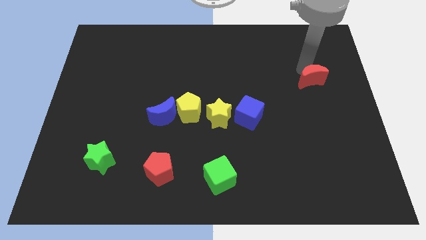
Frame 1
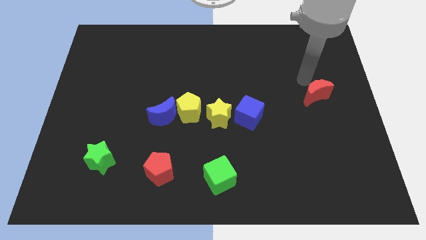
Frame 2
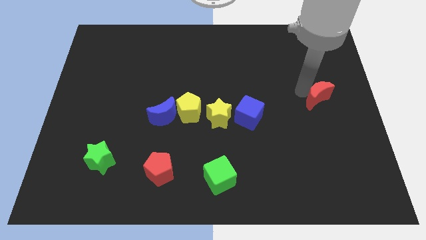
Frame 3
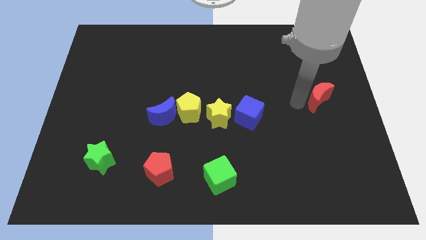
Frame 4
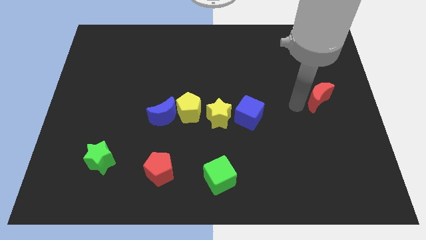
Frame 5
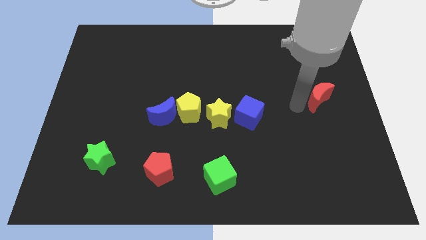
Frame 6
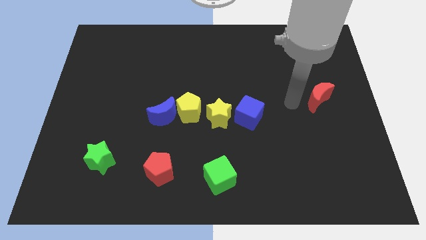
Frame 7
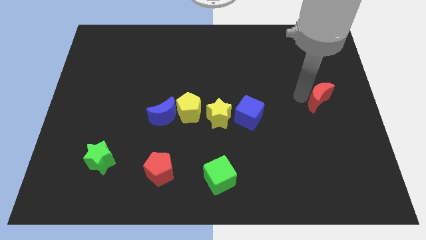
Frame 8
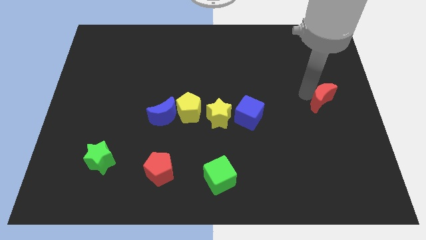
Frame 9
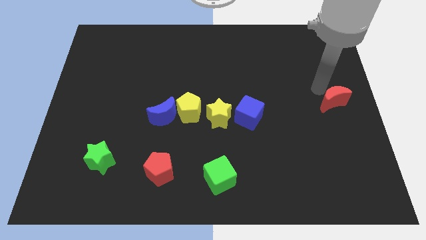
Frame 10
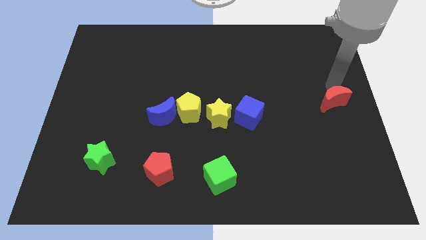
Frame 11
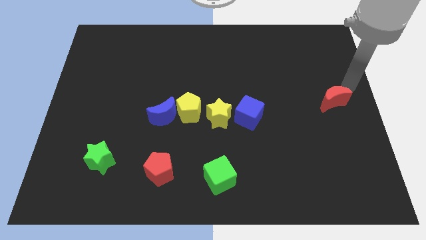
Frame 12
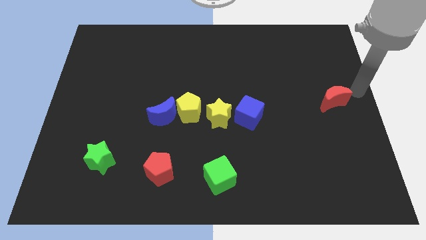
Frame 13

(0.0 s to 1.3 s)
push the red crescent to the right center of the board

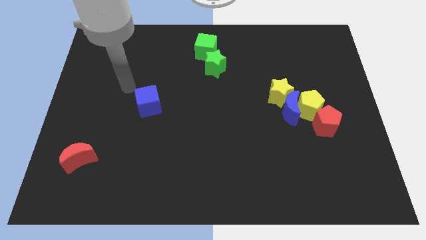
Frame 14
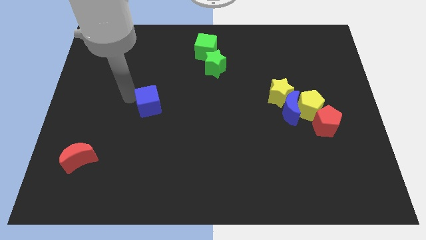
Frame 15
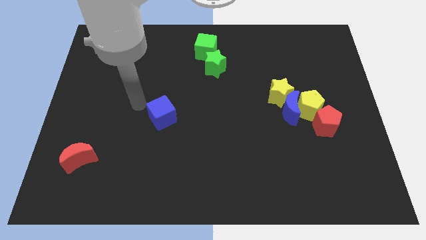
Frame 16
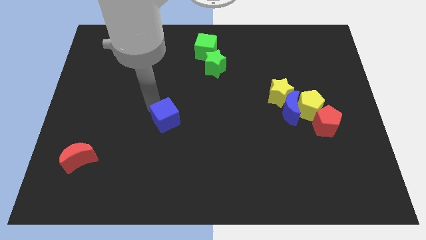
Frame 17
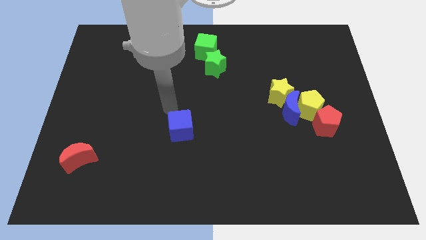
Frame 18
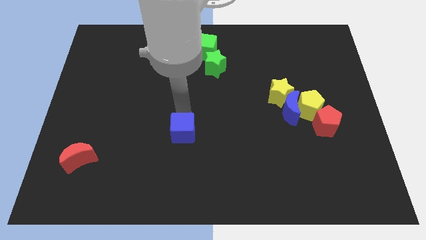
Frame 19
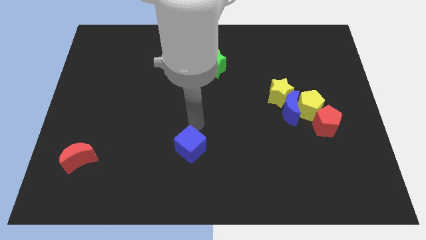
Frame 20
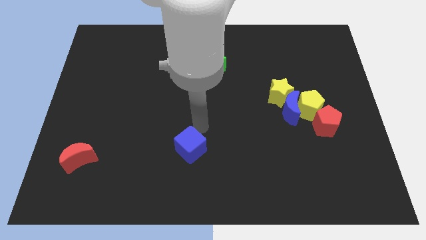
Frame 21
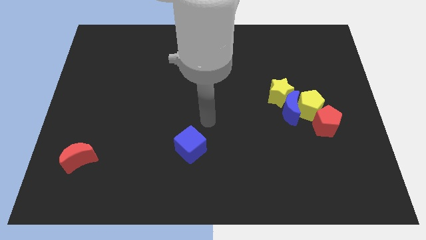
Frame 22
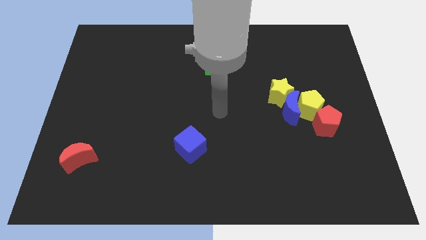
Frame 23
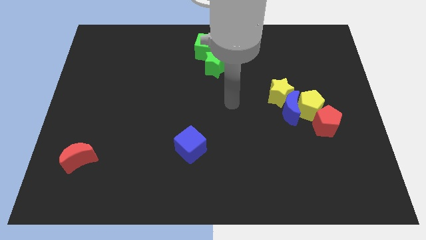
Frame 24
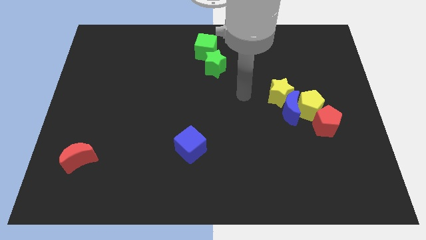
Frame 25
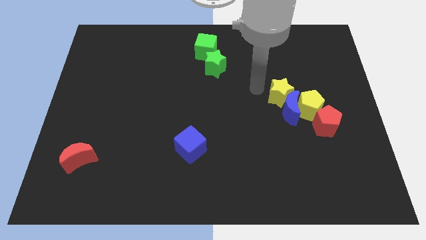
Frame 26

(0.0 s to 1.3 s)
place the blue cube parallel to red crescent

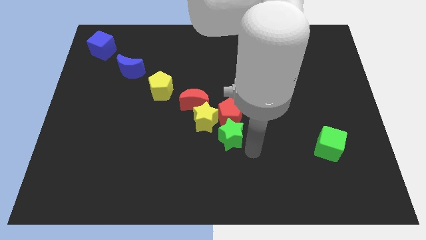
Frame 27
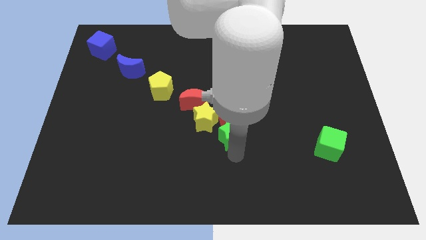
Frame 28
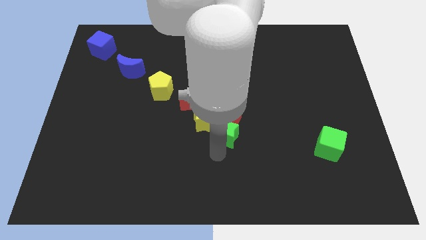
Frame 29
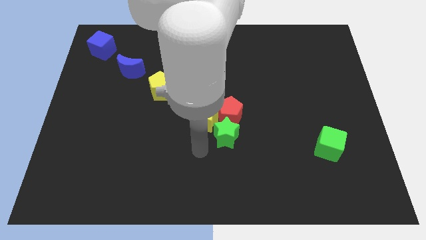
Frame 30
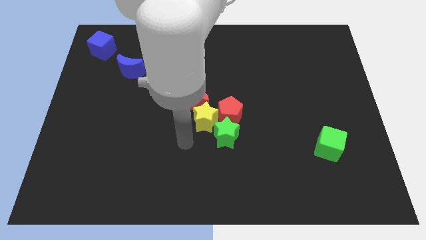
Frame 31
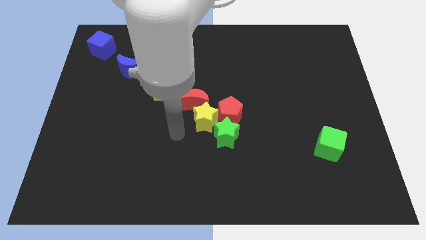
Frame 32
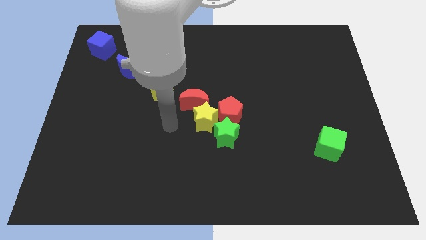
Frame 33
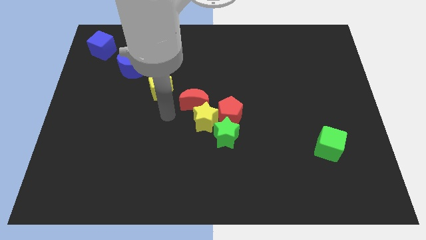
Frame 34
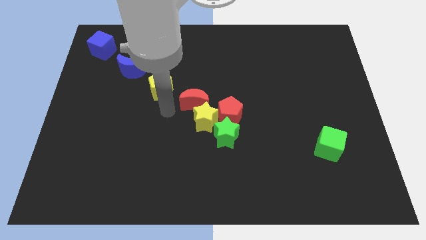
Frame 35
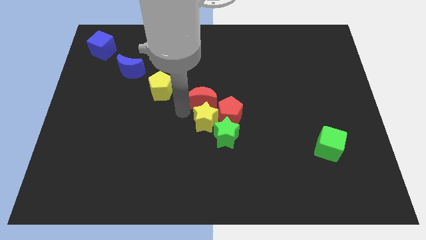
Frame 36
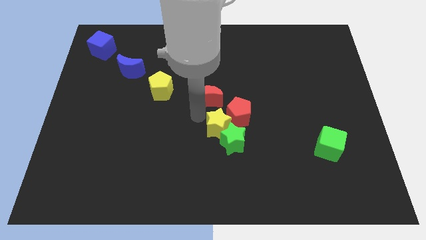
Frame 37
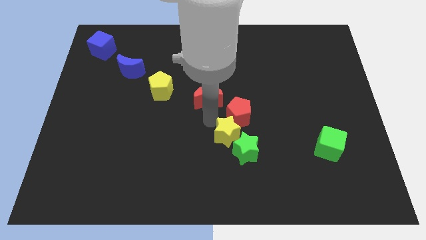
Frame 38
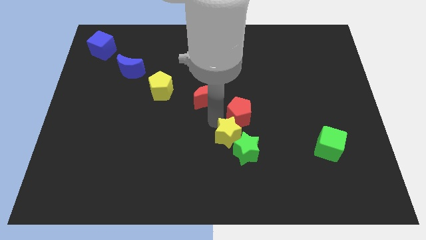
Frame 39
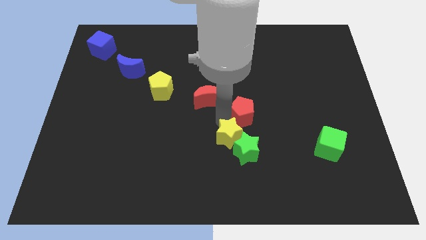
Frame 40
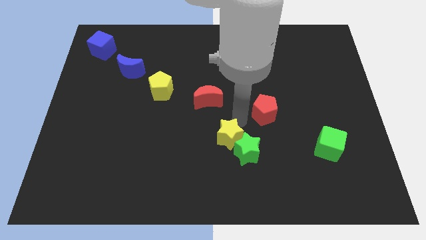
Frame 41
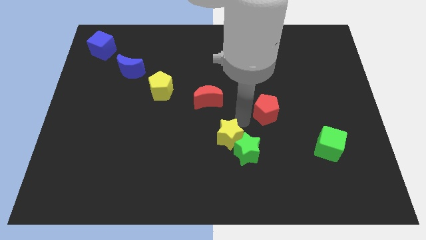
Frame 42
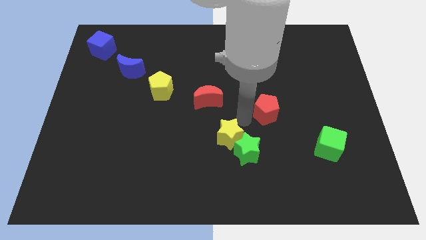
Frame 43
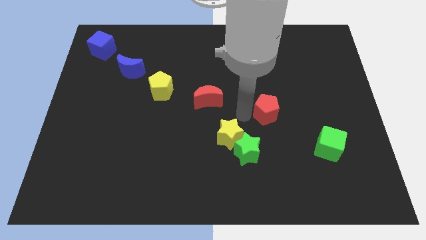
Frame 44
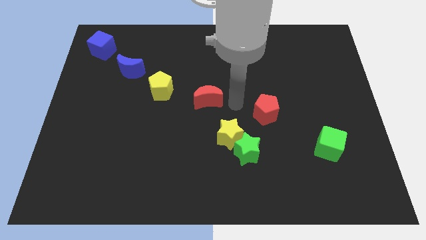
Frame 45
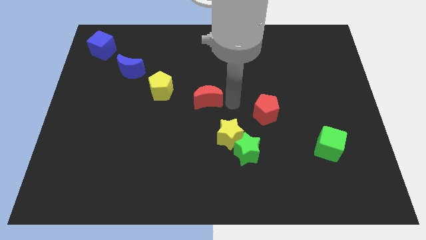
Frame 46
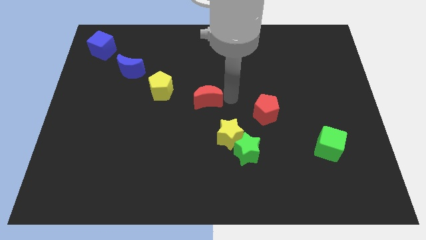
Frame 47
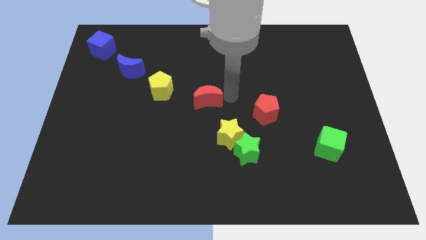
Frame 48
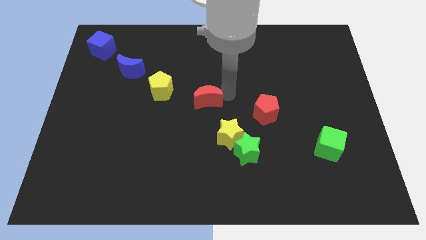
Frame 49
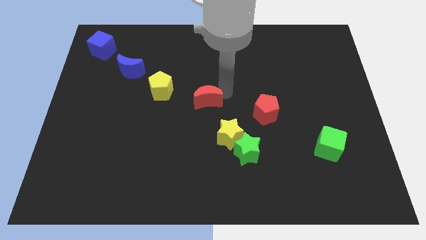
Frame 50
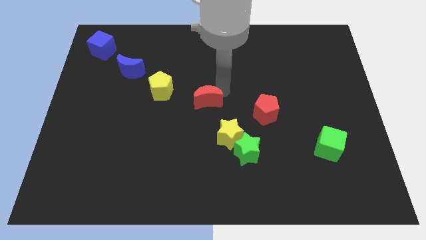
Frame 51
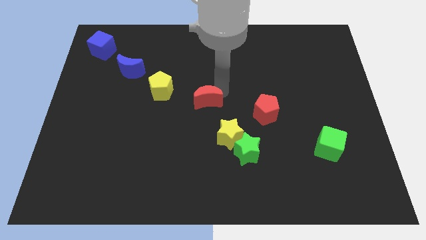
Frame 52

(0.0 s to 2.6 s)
push the yellow star into the green star

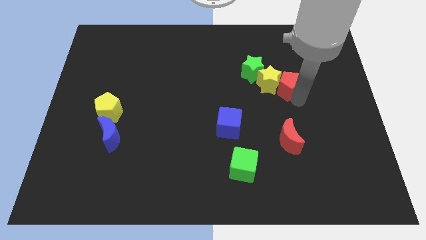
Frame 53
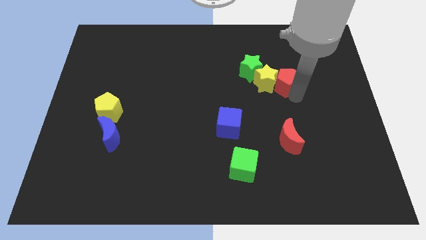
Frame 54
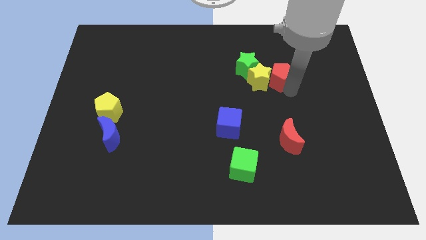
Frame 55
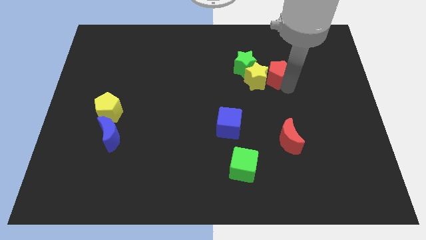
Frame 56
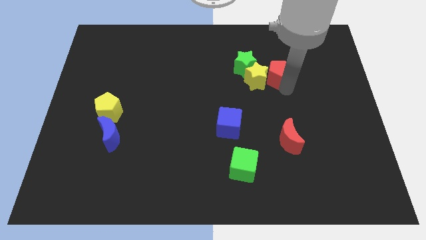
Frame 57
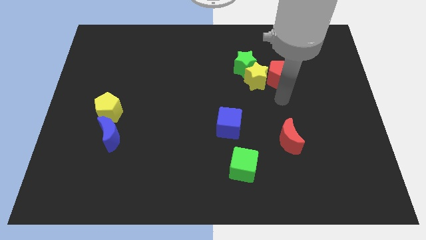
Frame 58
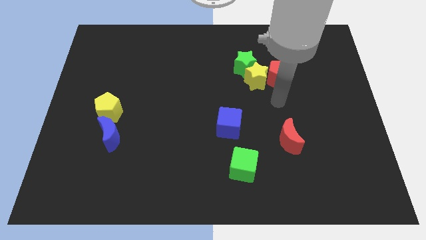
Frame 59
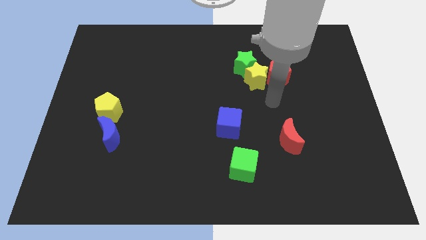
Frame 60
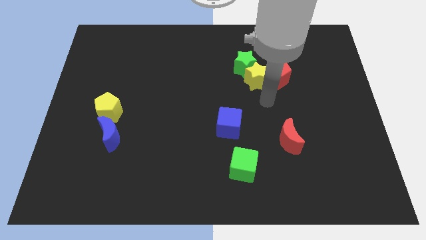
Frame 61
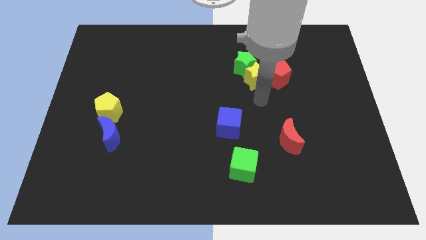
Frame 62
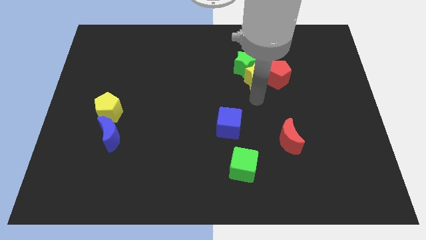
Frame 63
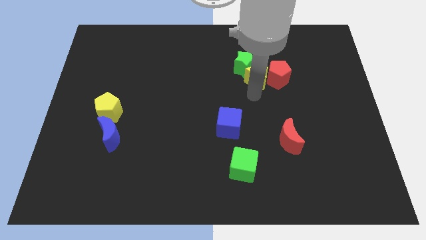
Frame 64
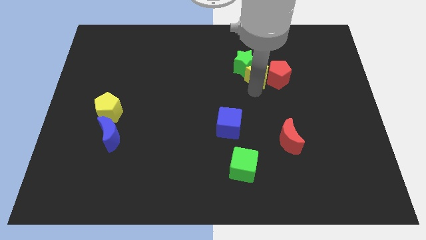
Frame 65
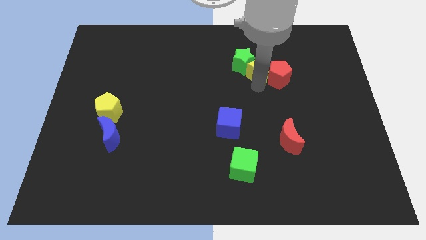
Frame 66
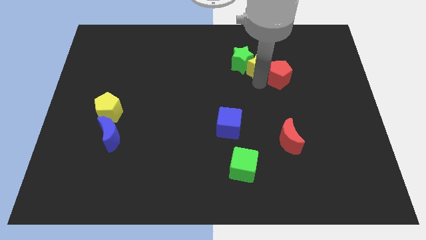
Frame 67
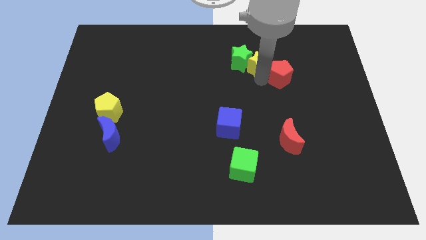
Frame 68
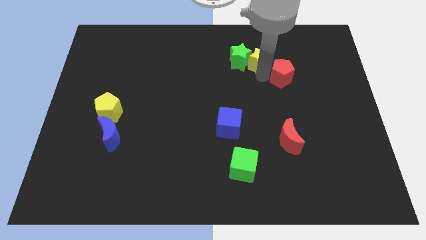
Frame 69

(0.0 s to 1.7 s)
push yellow star into green star

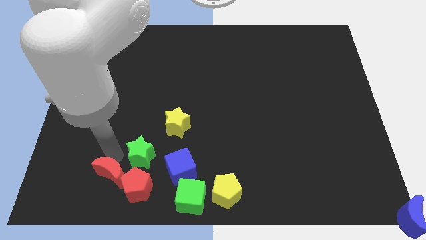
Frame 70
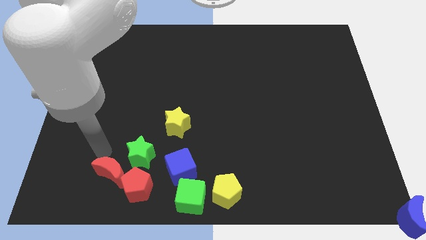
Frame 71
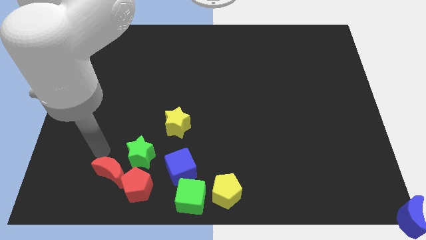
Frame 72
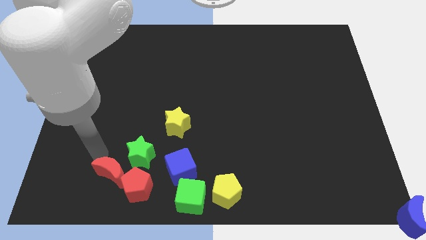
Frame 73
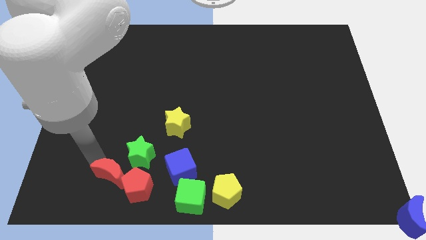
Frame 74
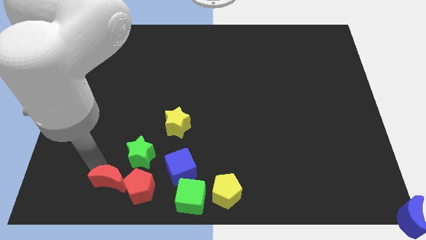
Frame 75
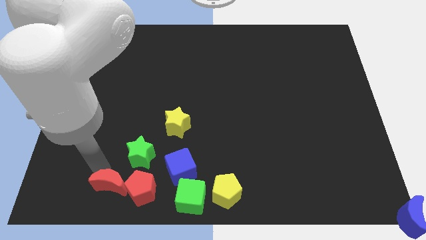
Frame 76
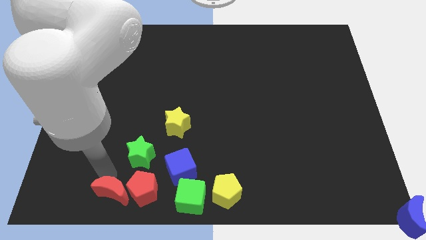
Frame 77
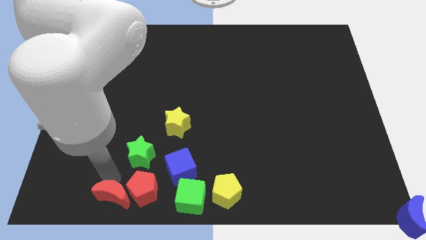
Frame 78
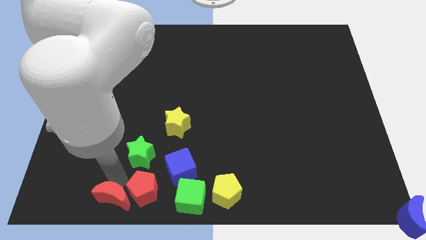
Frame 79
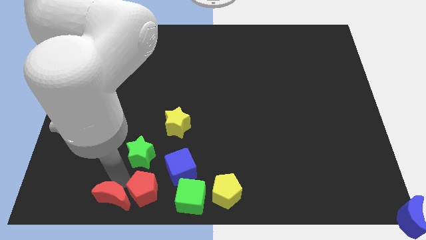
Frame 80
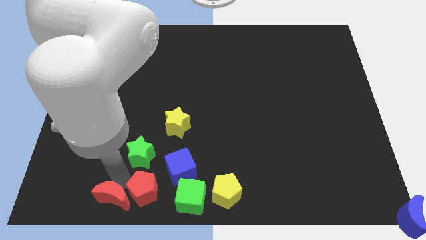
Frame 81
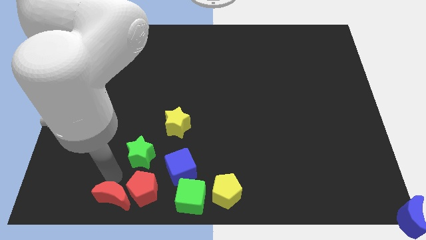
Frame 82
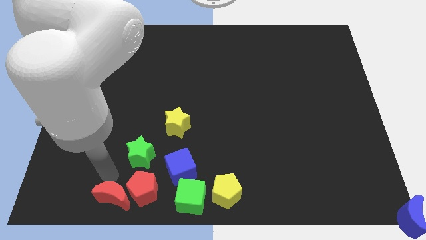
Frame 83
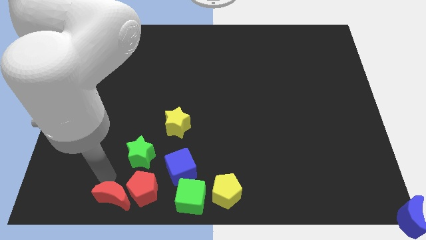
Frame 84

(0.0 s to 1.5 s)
move the red crescent to the left of the red pentagon

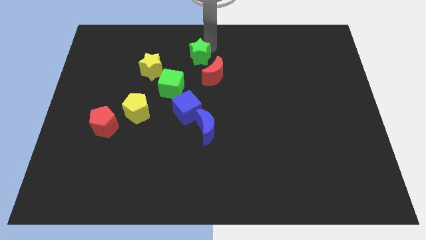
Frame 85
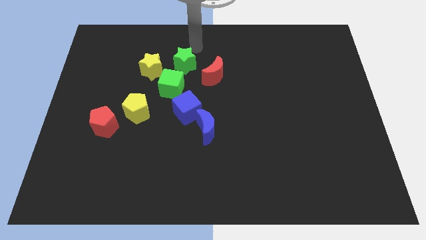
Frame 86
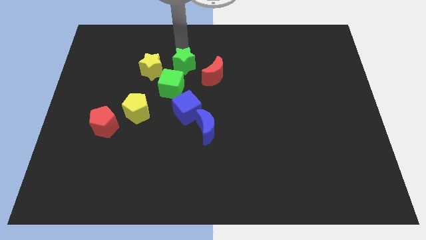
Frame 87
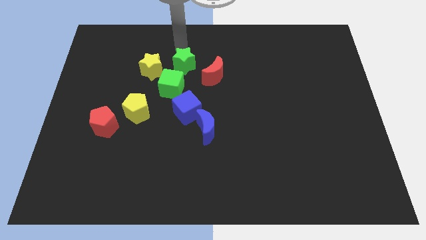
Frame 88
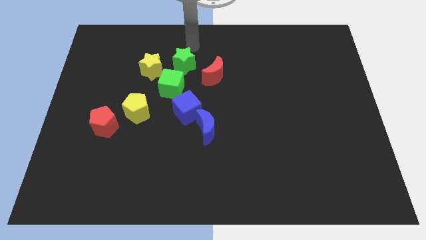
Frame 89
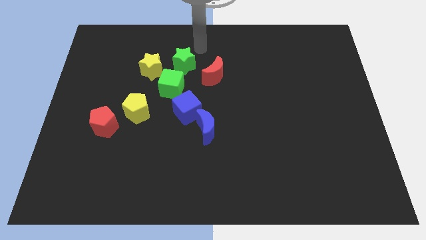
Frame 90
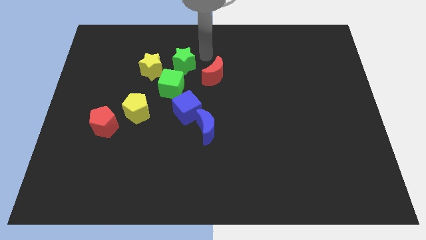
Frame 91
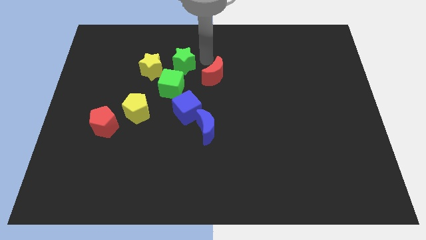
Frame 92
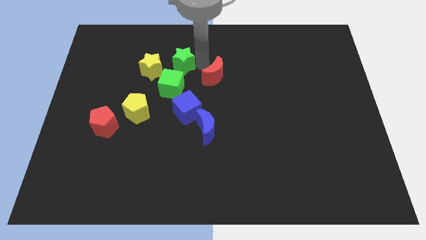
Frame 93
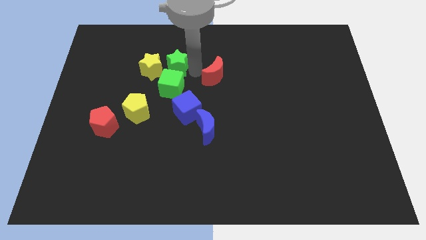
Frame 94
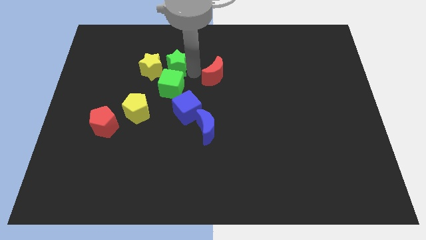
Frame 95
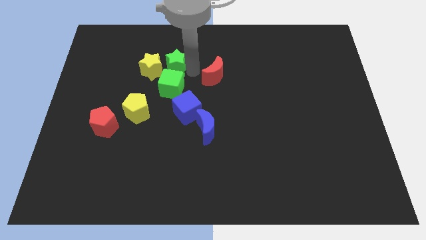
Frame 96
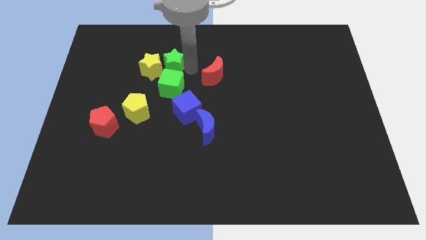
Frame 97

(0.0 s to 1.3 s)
move the green star to the top of the green cube
